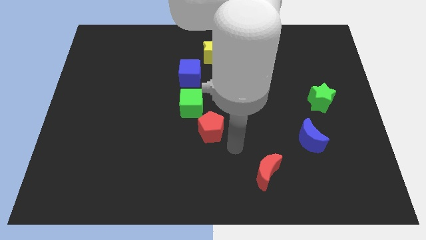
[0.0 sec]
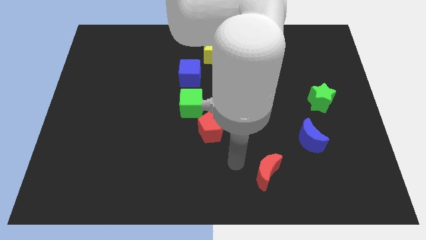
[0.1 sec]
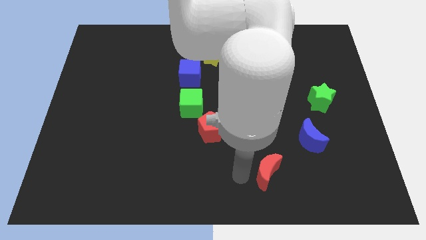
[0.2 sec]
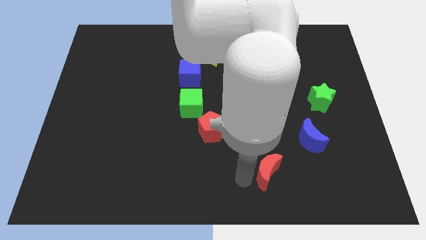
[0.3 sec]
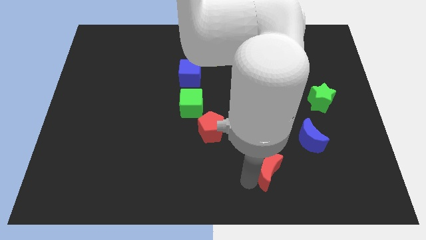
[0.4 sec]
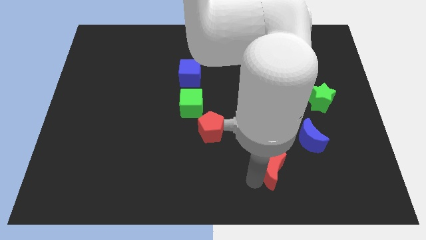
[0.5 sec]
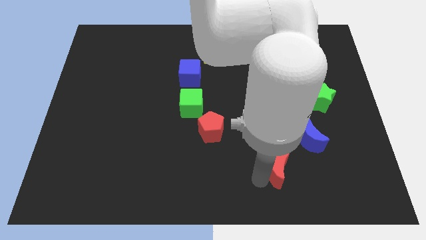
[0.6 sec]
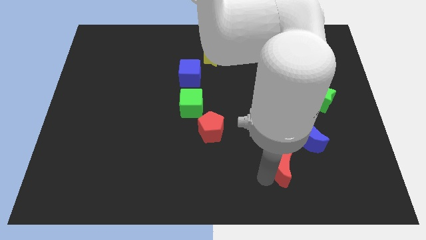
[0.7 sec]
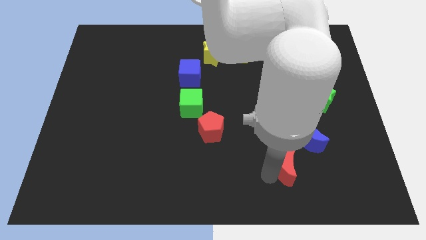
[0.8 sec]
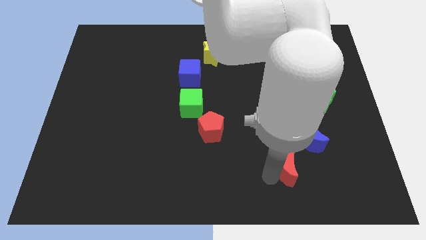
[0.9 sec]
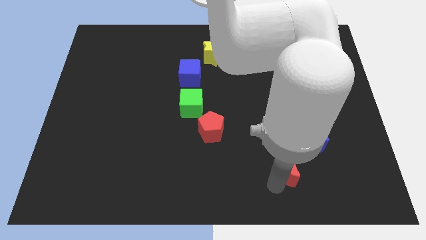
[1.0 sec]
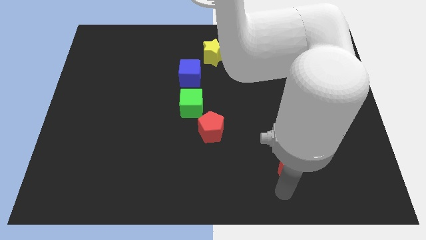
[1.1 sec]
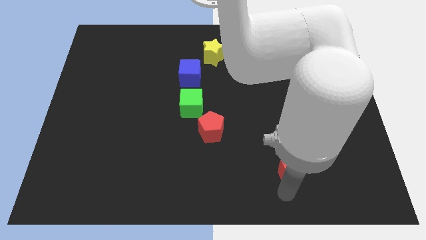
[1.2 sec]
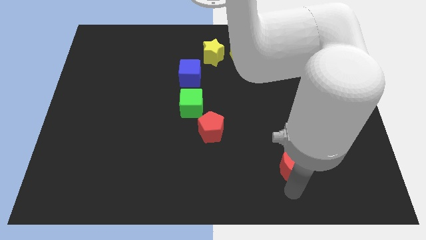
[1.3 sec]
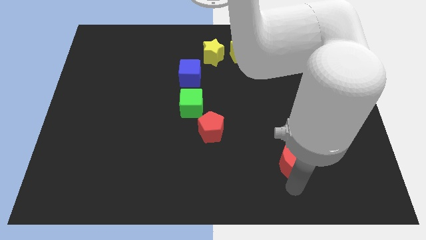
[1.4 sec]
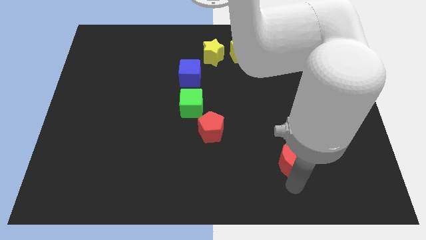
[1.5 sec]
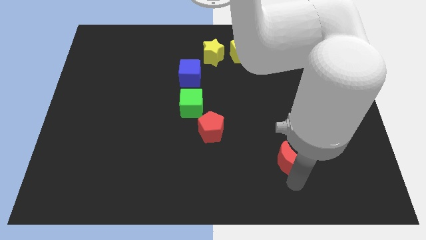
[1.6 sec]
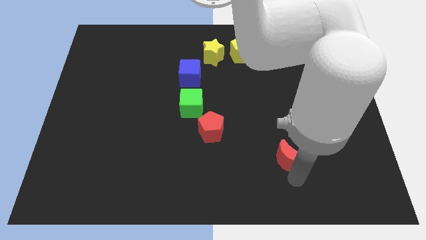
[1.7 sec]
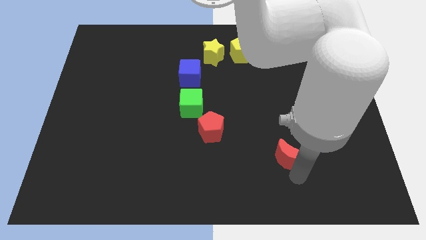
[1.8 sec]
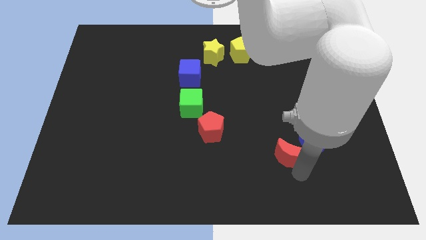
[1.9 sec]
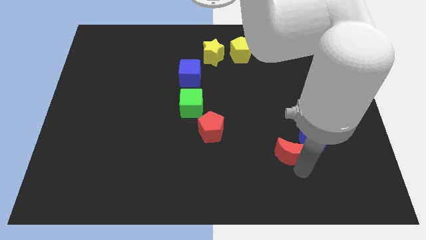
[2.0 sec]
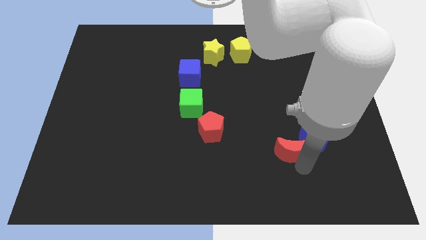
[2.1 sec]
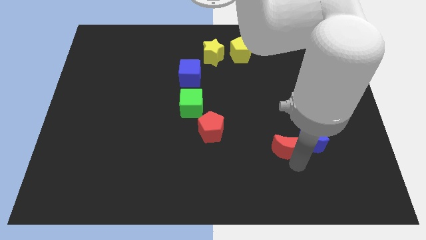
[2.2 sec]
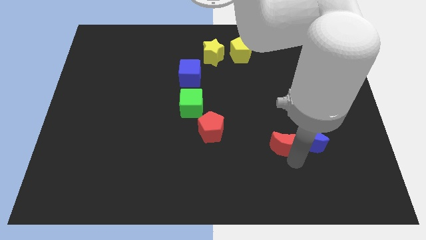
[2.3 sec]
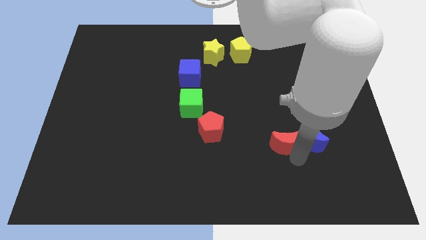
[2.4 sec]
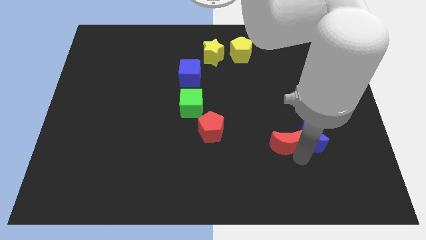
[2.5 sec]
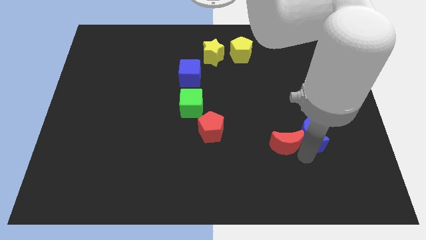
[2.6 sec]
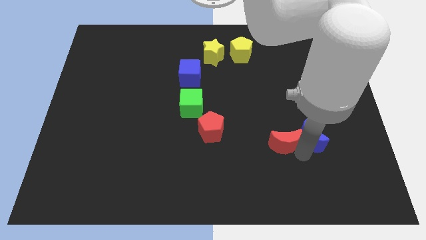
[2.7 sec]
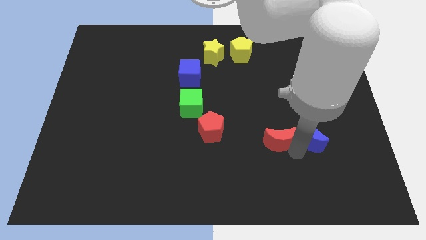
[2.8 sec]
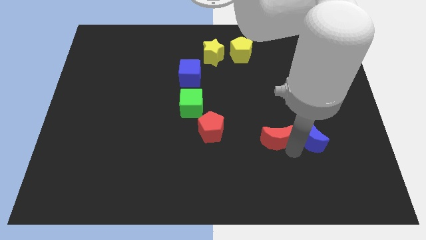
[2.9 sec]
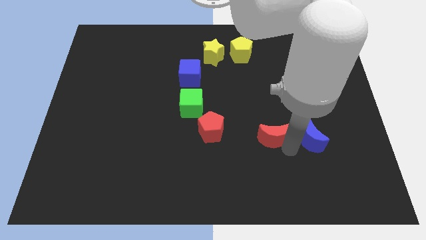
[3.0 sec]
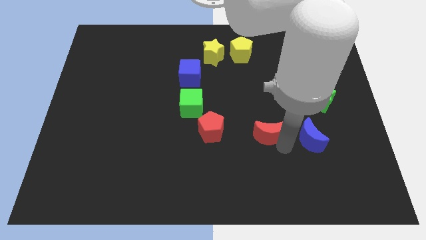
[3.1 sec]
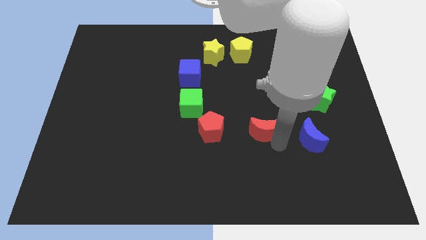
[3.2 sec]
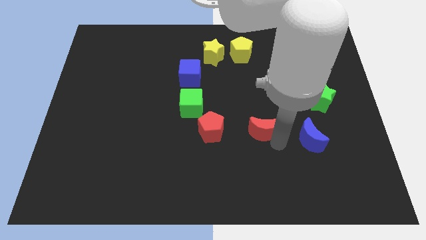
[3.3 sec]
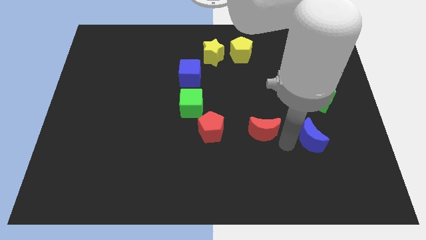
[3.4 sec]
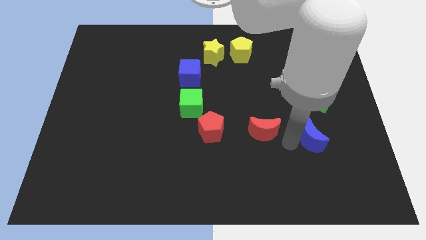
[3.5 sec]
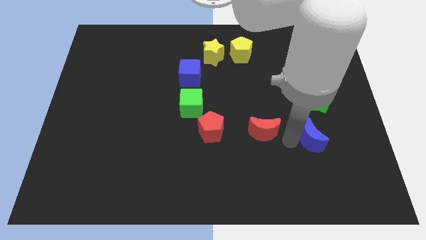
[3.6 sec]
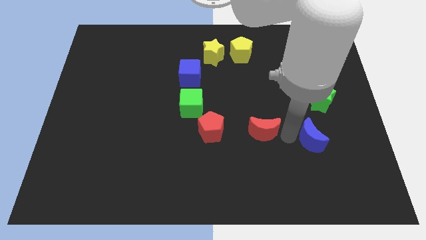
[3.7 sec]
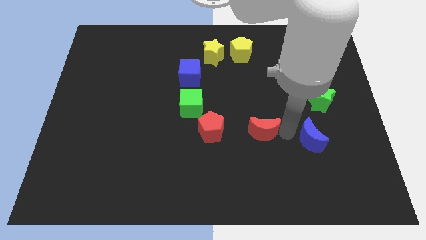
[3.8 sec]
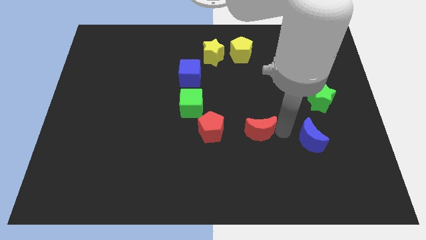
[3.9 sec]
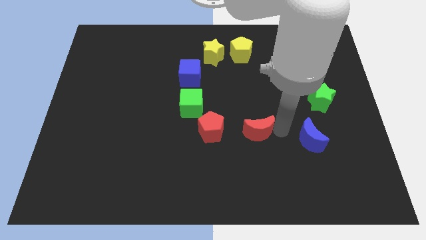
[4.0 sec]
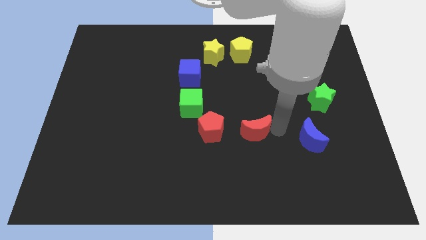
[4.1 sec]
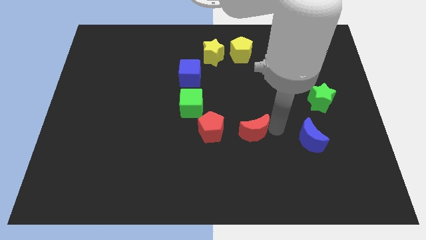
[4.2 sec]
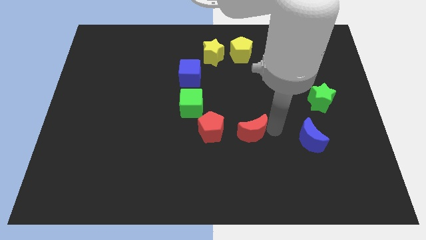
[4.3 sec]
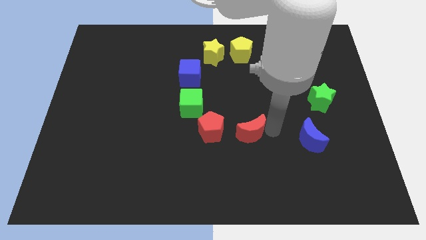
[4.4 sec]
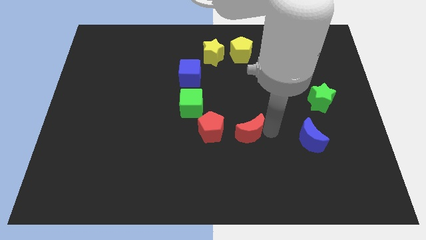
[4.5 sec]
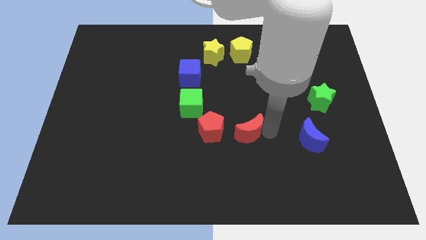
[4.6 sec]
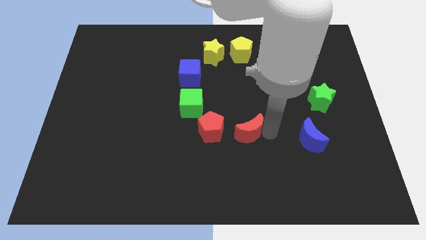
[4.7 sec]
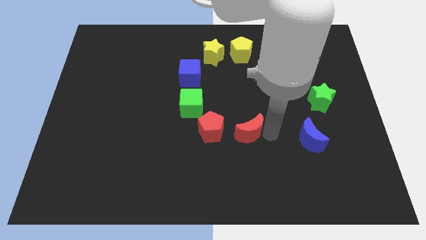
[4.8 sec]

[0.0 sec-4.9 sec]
push the red crescent to the right of the red pentagon

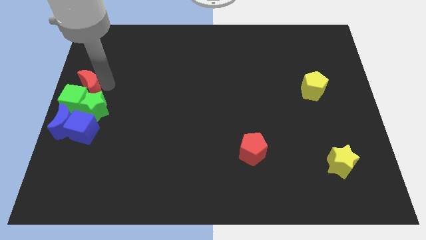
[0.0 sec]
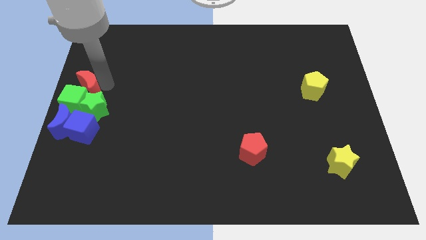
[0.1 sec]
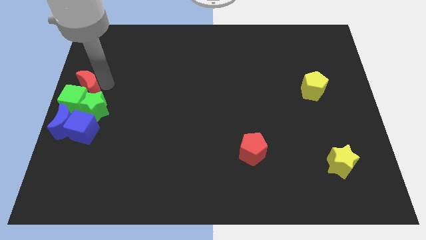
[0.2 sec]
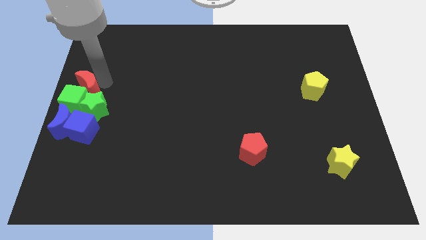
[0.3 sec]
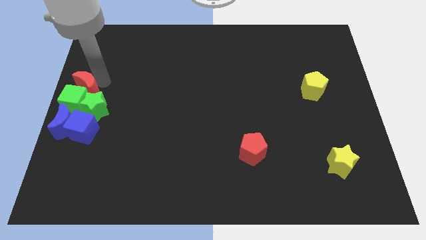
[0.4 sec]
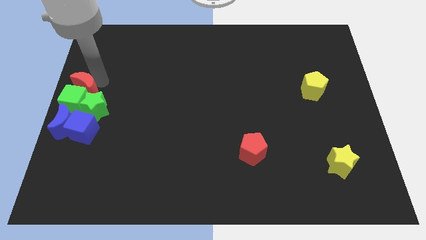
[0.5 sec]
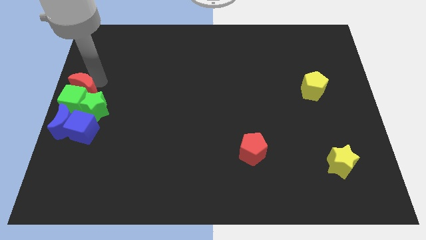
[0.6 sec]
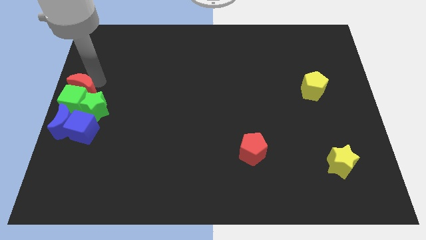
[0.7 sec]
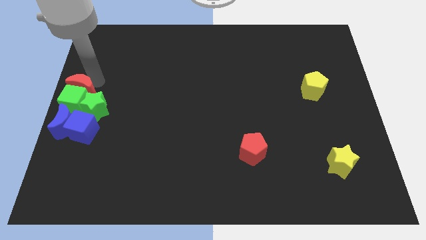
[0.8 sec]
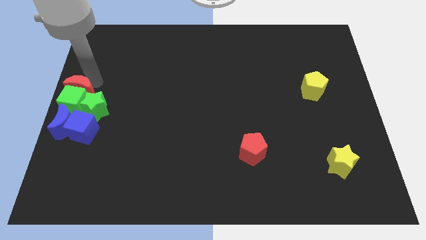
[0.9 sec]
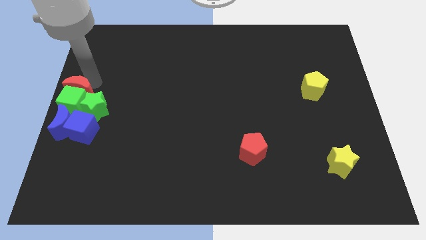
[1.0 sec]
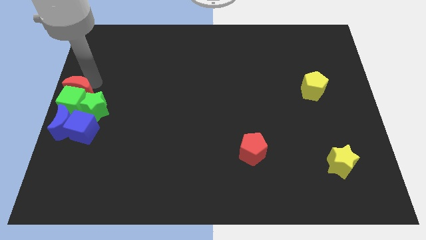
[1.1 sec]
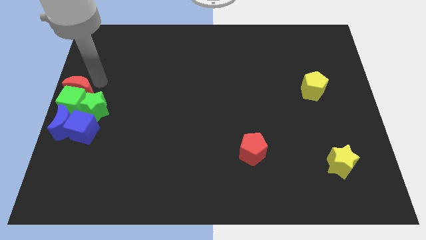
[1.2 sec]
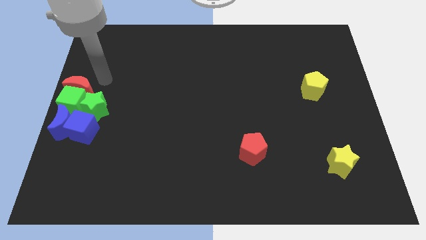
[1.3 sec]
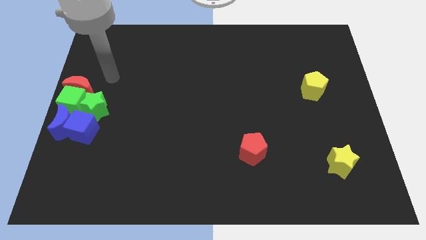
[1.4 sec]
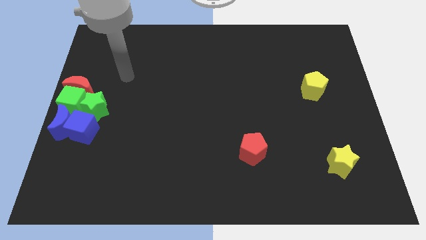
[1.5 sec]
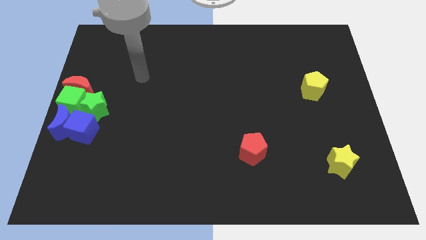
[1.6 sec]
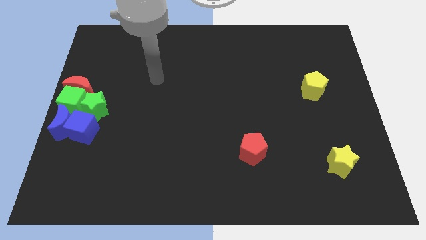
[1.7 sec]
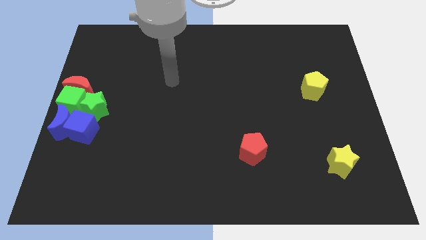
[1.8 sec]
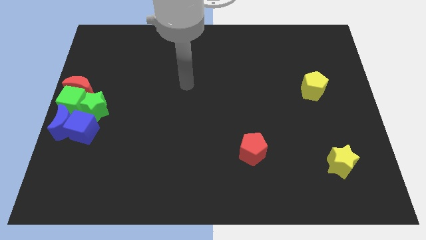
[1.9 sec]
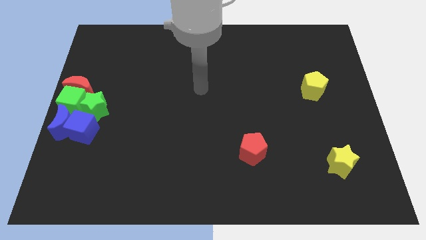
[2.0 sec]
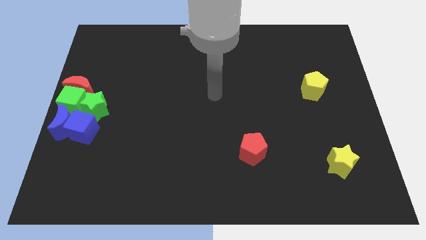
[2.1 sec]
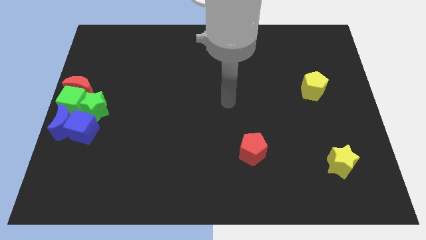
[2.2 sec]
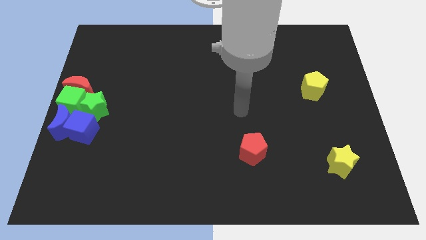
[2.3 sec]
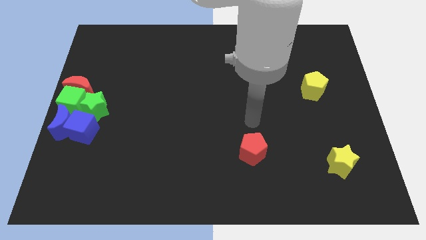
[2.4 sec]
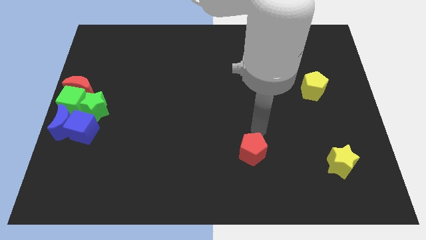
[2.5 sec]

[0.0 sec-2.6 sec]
place the red crescent at top of the green cube

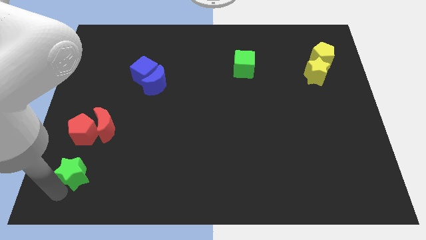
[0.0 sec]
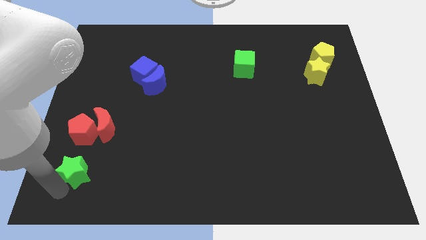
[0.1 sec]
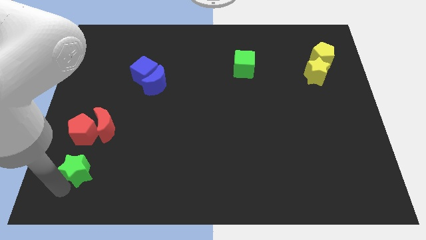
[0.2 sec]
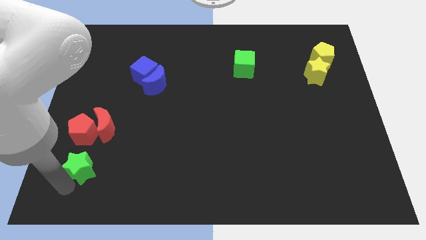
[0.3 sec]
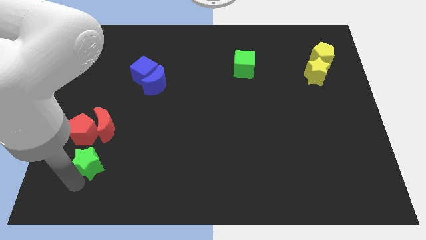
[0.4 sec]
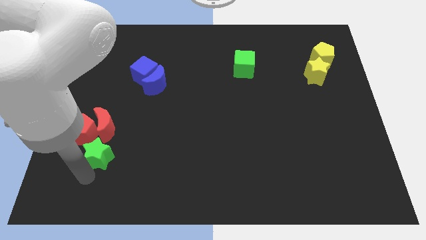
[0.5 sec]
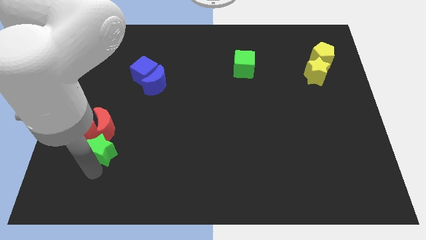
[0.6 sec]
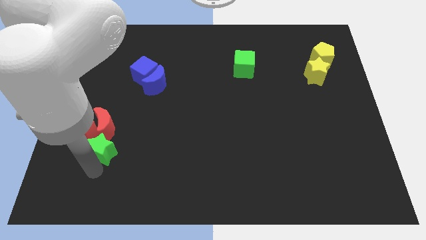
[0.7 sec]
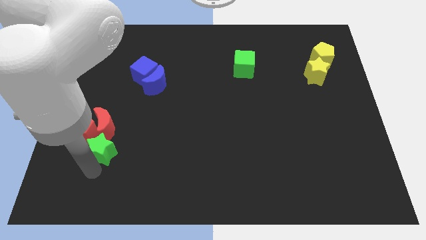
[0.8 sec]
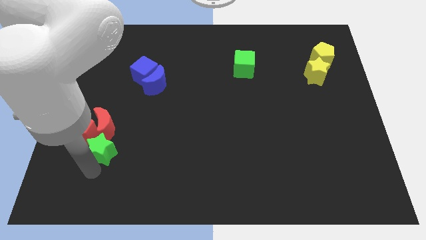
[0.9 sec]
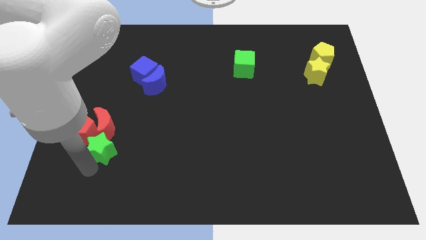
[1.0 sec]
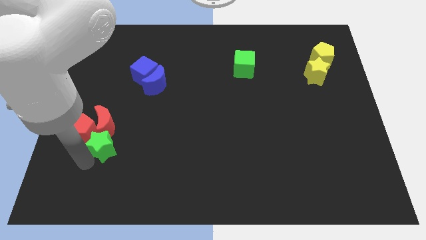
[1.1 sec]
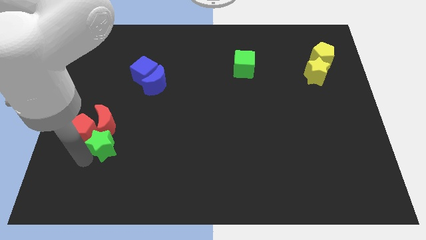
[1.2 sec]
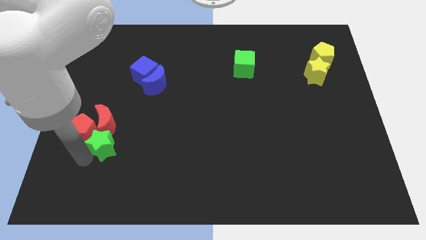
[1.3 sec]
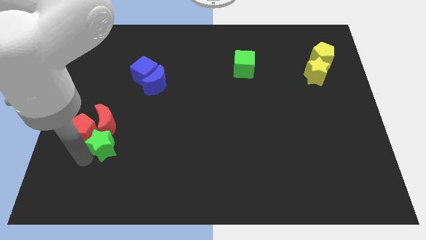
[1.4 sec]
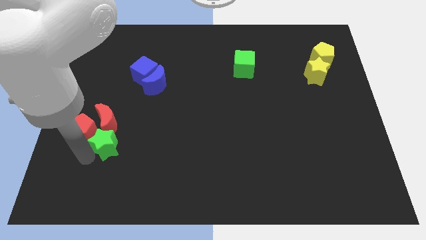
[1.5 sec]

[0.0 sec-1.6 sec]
push the green star into the blocks
